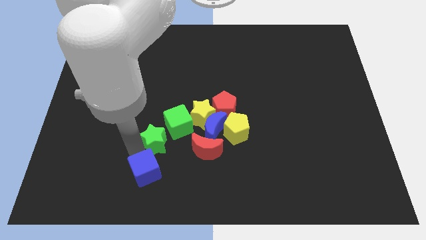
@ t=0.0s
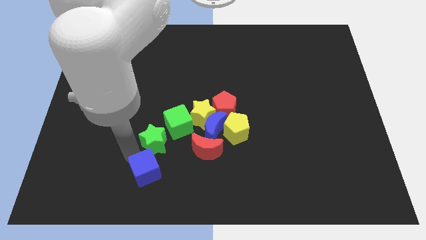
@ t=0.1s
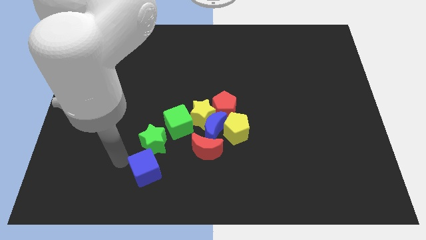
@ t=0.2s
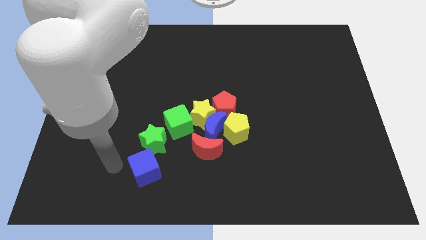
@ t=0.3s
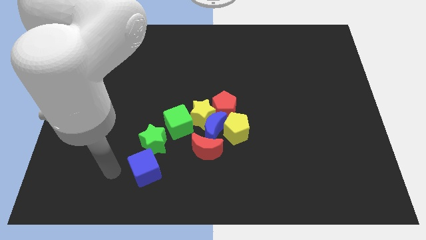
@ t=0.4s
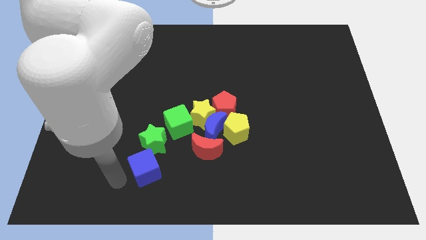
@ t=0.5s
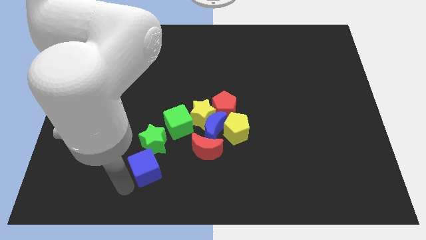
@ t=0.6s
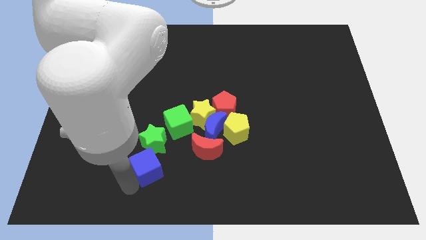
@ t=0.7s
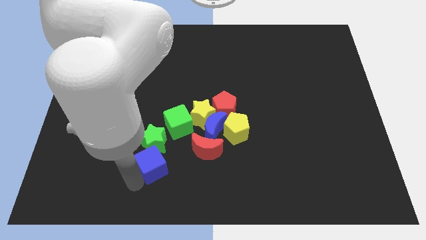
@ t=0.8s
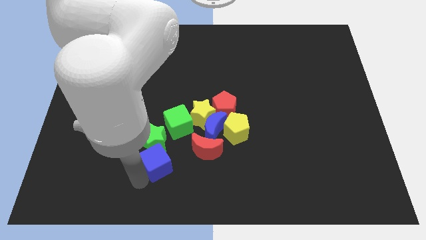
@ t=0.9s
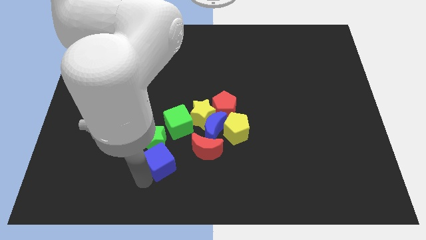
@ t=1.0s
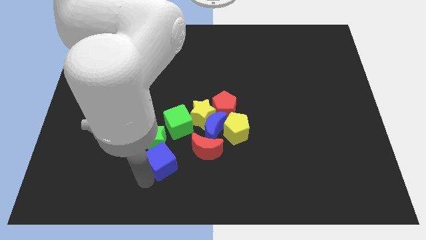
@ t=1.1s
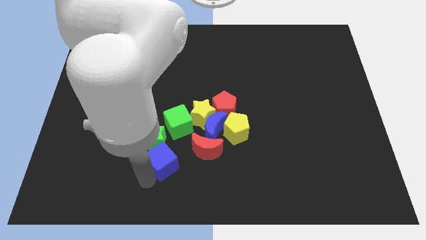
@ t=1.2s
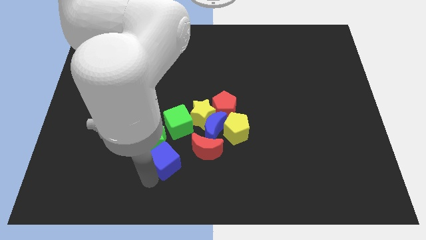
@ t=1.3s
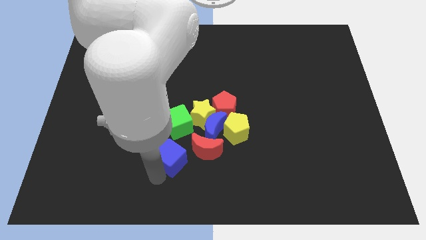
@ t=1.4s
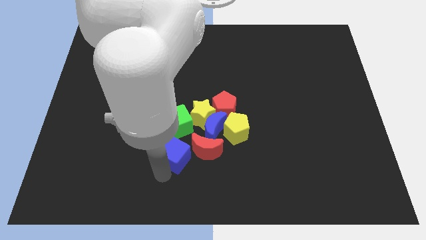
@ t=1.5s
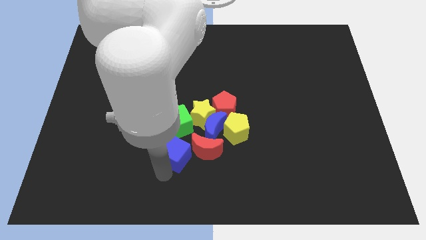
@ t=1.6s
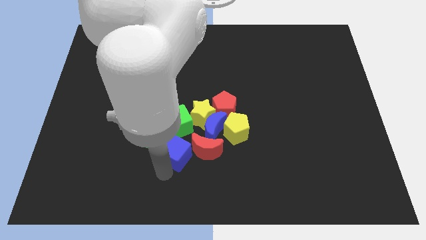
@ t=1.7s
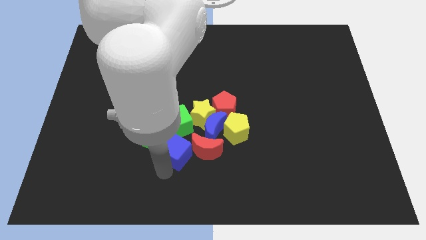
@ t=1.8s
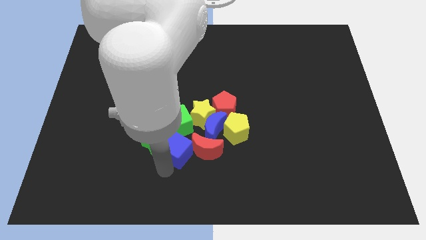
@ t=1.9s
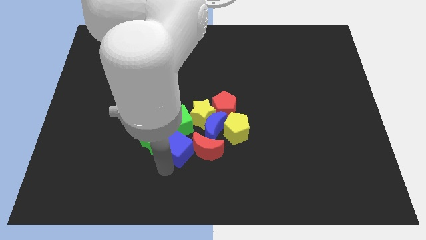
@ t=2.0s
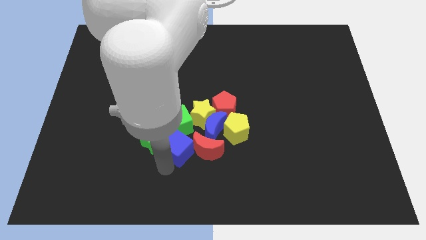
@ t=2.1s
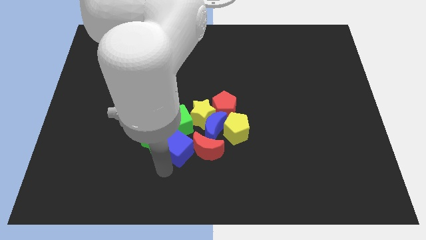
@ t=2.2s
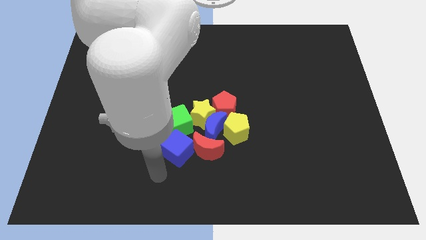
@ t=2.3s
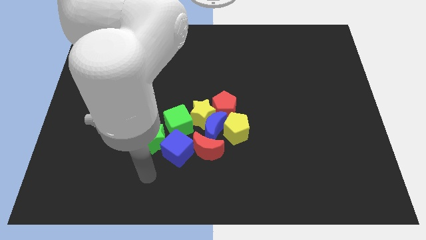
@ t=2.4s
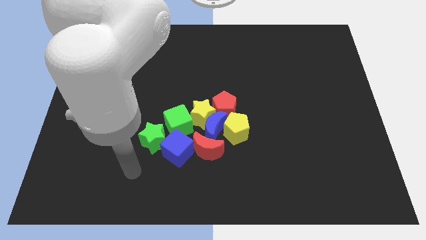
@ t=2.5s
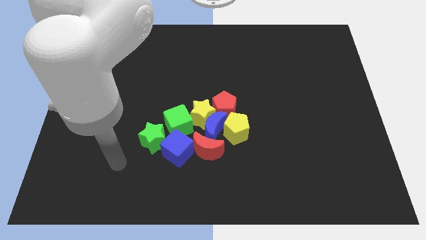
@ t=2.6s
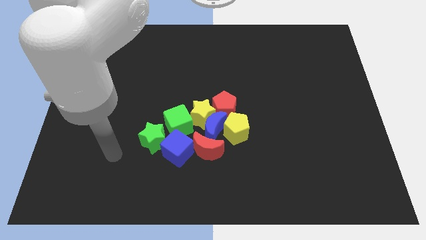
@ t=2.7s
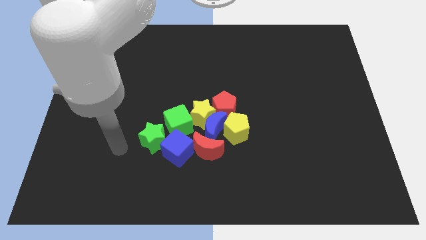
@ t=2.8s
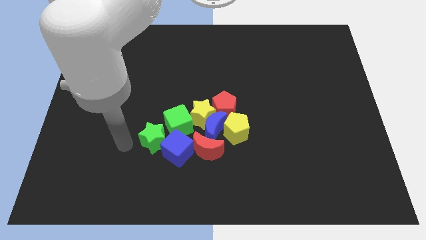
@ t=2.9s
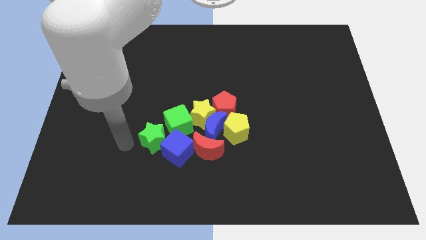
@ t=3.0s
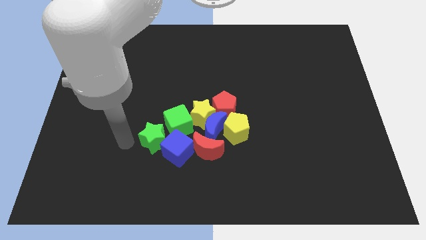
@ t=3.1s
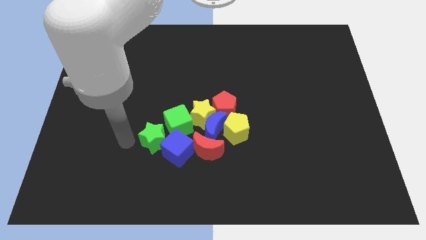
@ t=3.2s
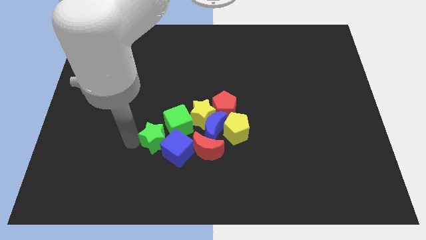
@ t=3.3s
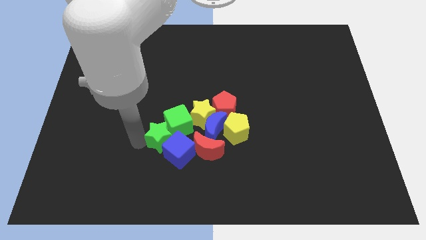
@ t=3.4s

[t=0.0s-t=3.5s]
move the blue cube to the left side of the red moon

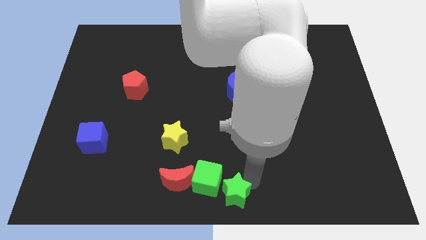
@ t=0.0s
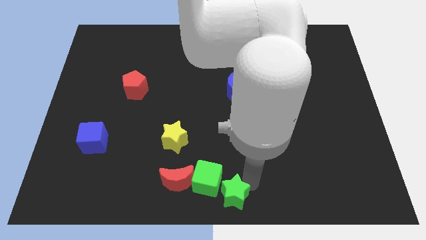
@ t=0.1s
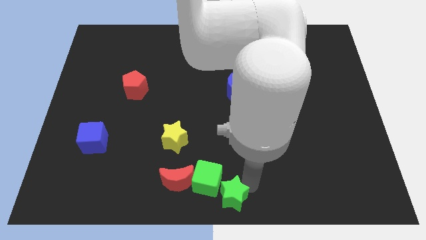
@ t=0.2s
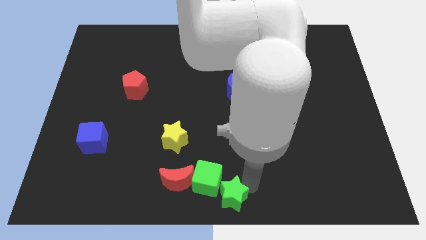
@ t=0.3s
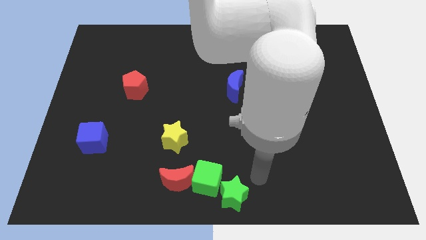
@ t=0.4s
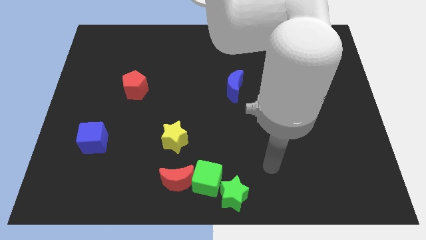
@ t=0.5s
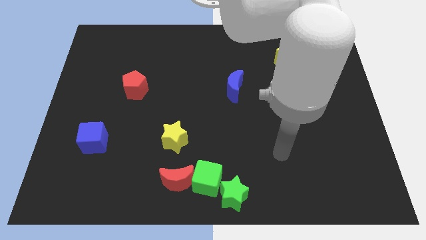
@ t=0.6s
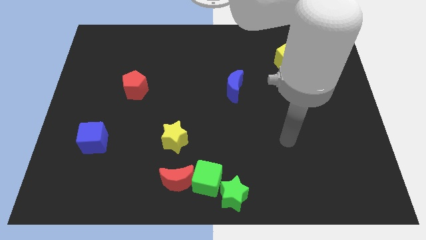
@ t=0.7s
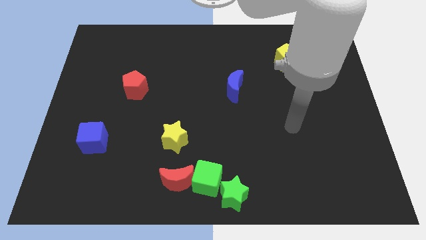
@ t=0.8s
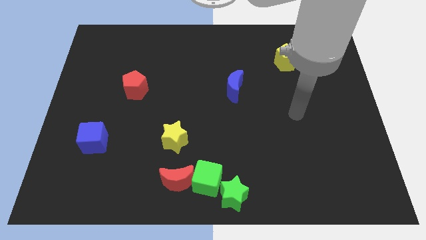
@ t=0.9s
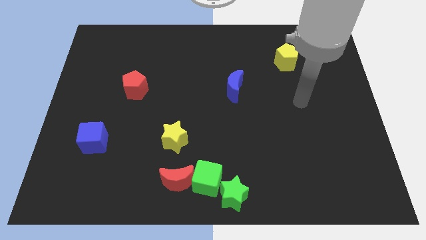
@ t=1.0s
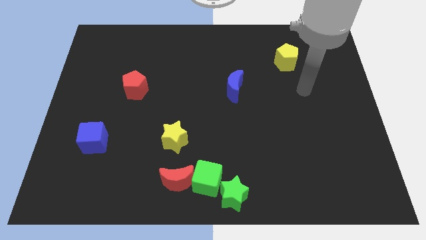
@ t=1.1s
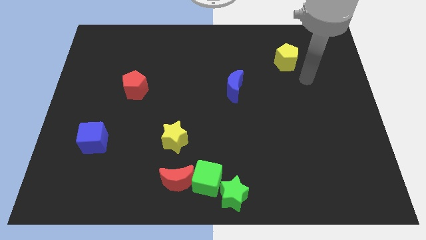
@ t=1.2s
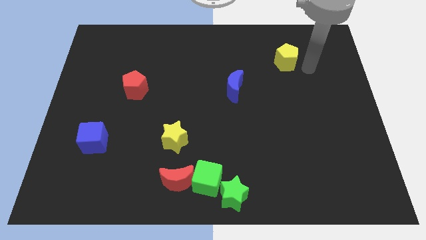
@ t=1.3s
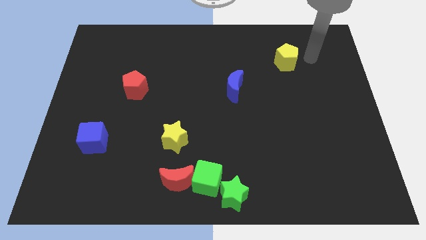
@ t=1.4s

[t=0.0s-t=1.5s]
push the green star slightly downwards

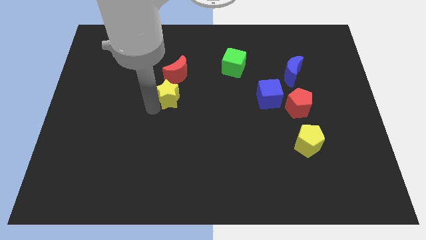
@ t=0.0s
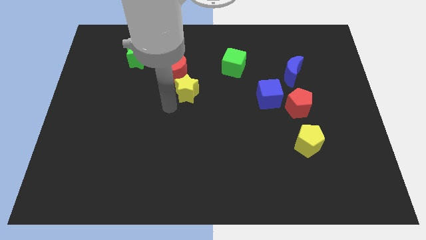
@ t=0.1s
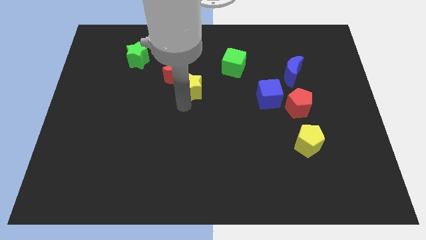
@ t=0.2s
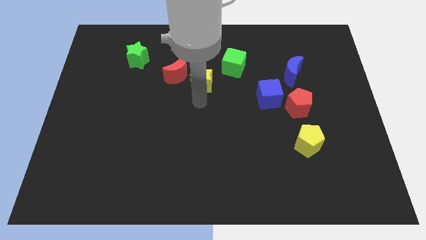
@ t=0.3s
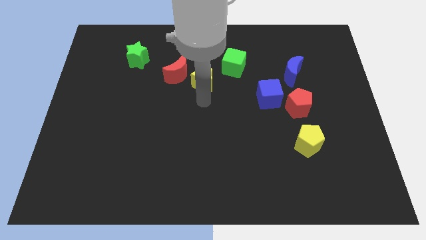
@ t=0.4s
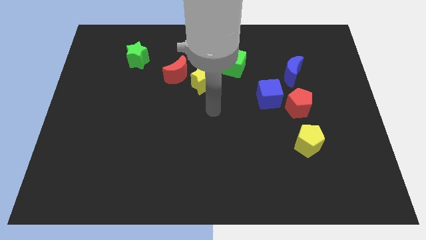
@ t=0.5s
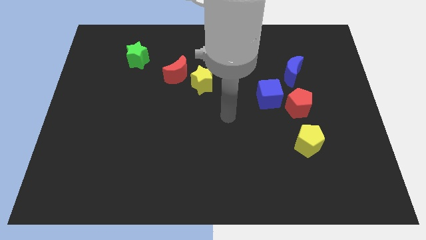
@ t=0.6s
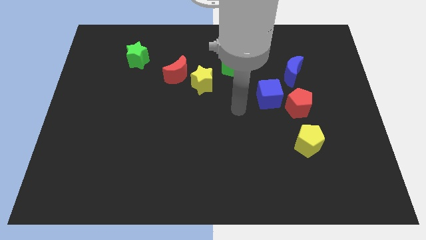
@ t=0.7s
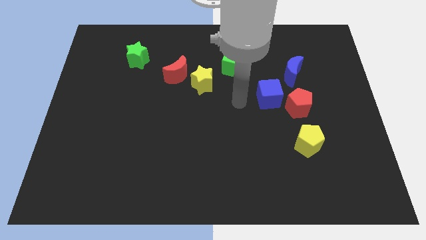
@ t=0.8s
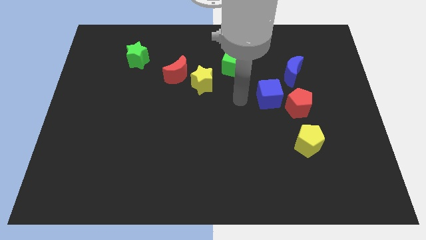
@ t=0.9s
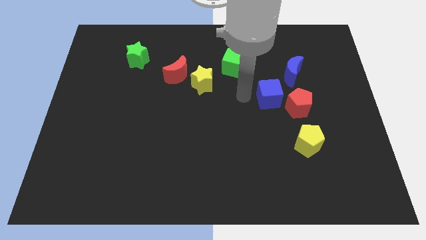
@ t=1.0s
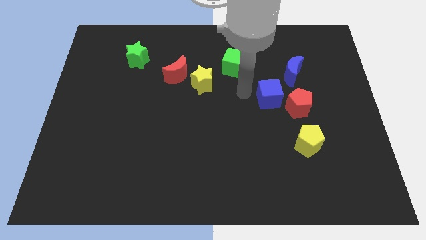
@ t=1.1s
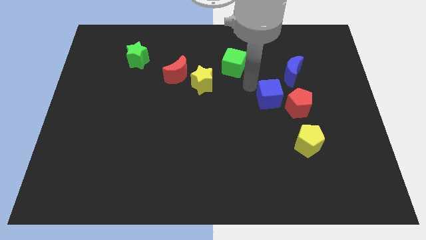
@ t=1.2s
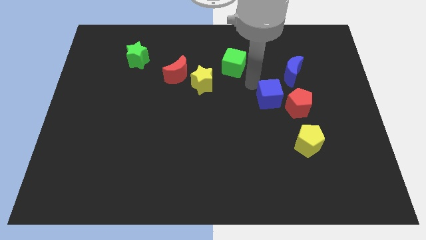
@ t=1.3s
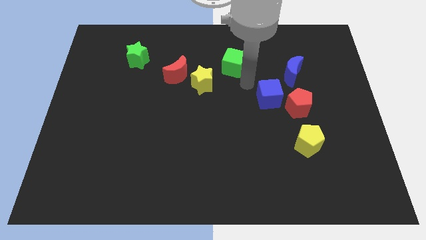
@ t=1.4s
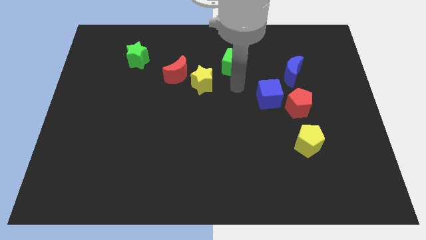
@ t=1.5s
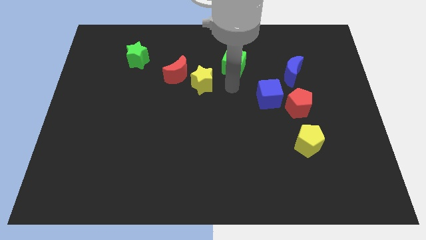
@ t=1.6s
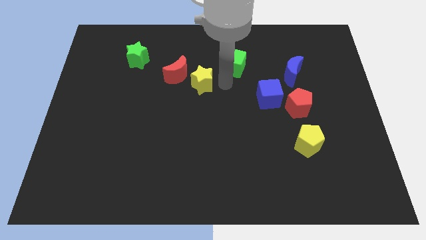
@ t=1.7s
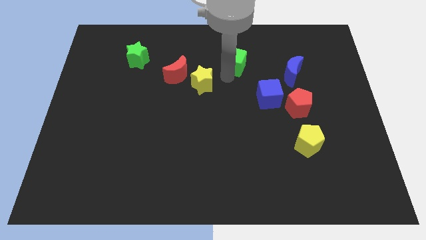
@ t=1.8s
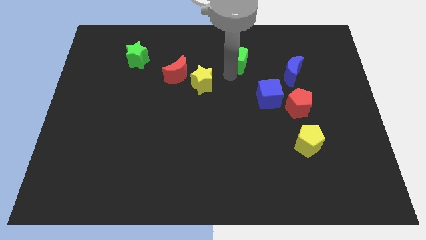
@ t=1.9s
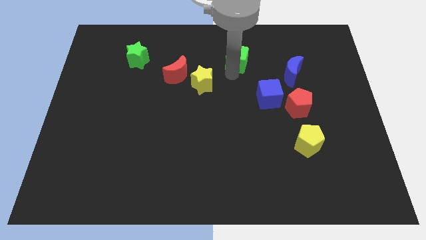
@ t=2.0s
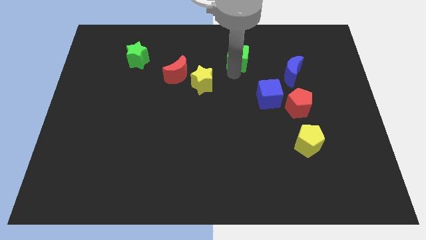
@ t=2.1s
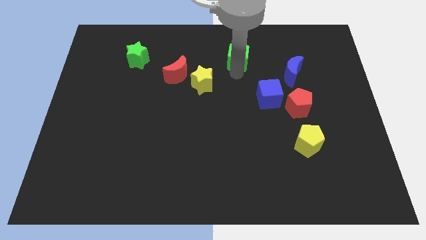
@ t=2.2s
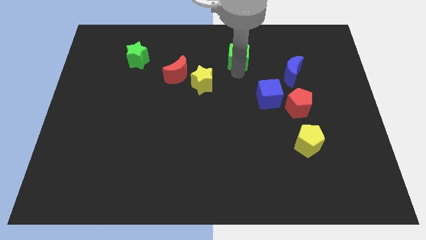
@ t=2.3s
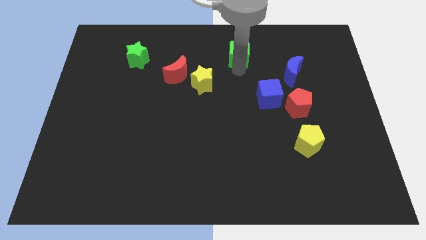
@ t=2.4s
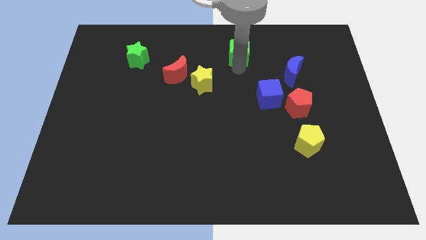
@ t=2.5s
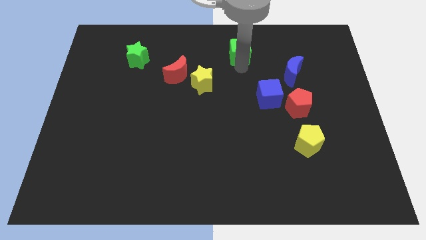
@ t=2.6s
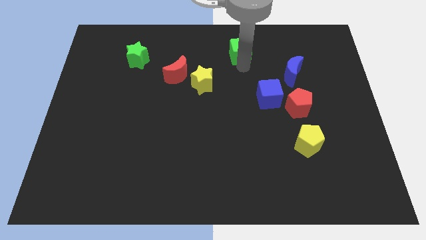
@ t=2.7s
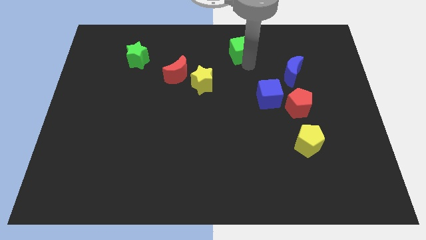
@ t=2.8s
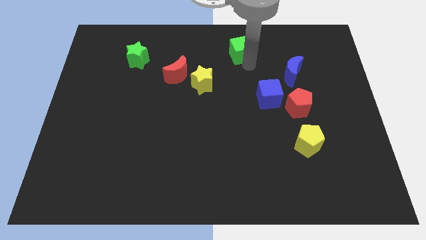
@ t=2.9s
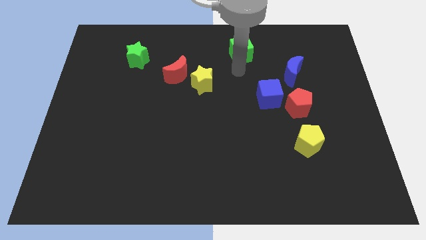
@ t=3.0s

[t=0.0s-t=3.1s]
push the bottom of yellow star and green cube

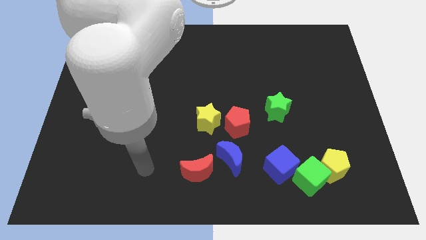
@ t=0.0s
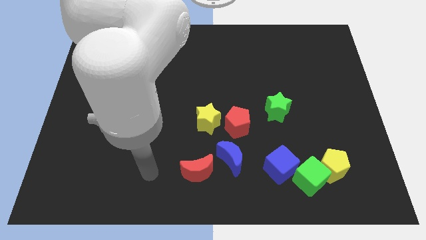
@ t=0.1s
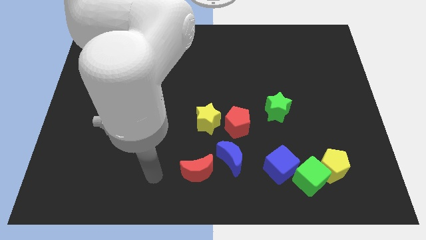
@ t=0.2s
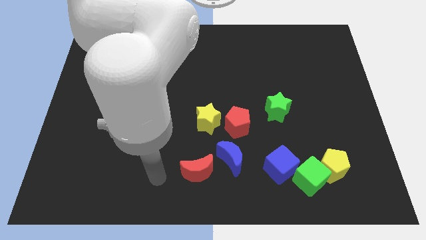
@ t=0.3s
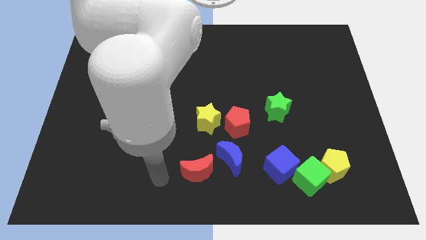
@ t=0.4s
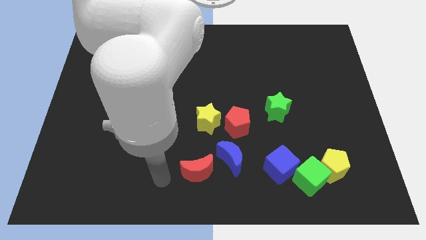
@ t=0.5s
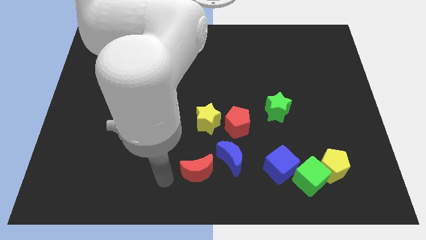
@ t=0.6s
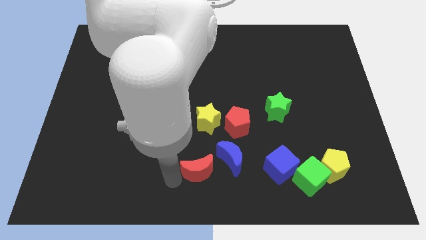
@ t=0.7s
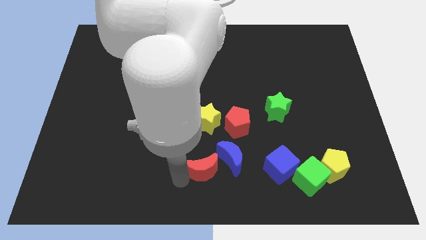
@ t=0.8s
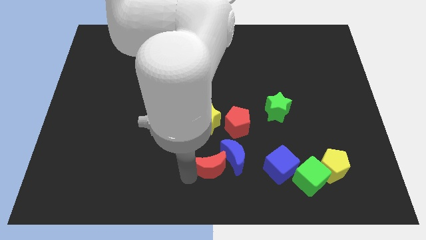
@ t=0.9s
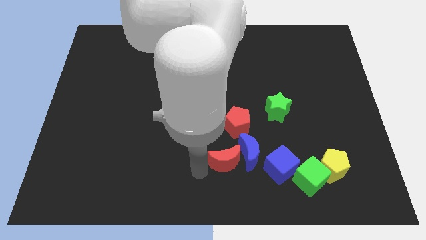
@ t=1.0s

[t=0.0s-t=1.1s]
move the red moon into the blue moon
